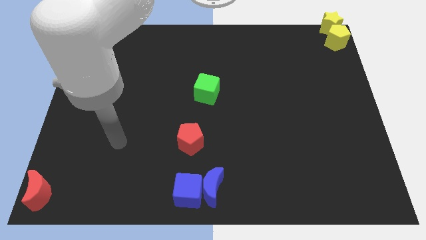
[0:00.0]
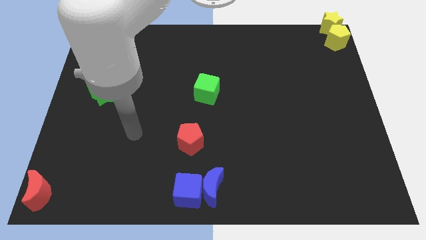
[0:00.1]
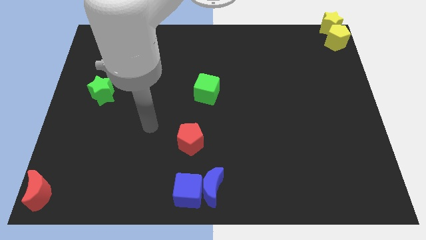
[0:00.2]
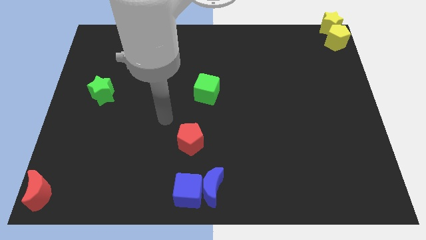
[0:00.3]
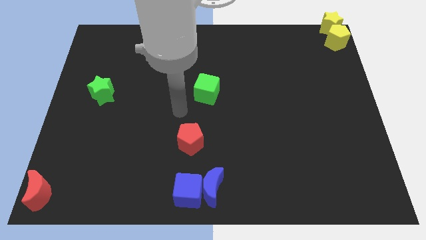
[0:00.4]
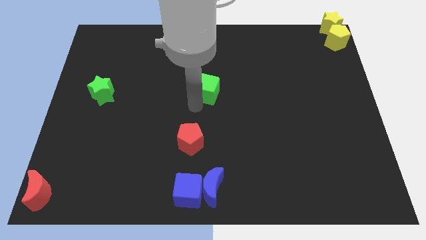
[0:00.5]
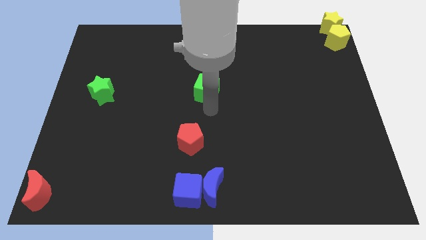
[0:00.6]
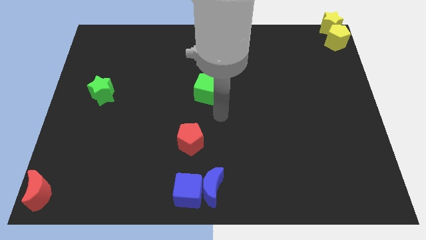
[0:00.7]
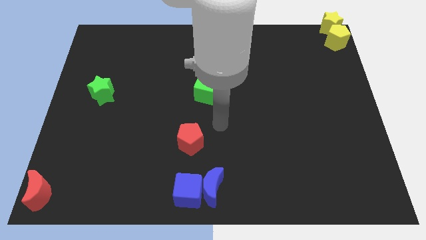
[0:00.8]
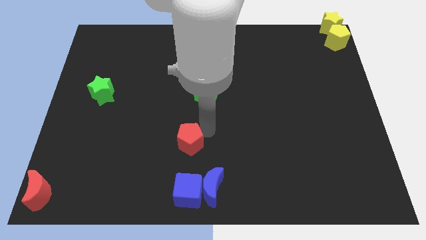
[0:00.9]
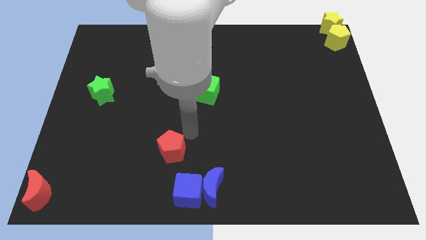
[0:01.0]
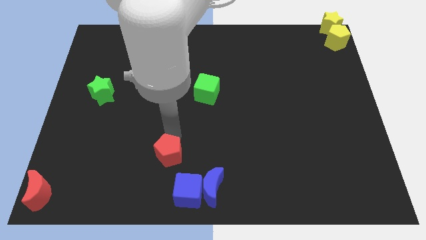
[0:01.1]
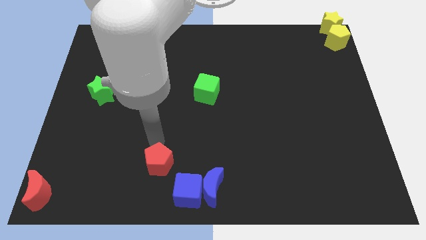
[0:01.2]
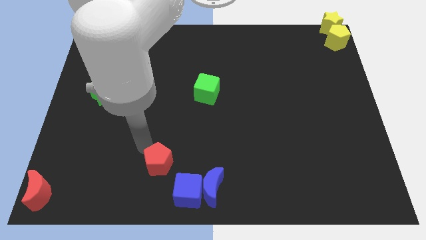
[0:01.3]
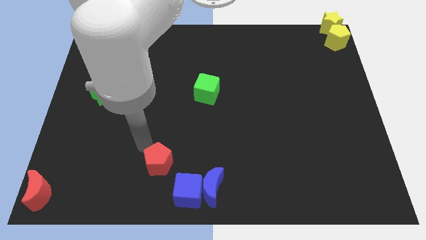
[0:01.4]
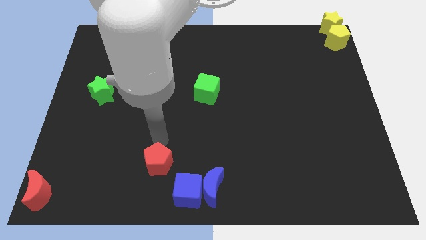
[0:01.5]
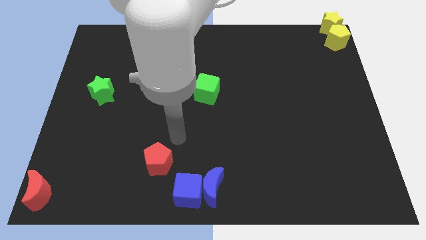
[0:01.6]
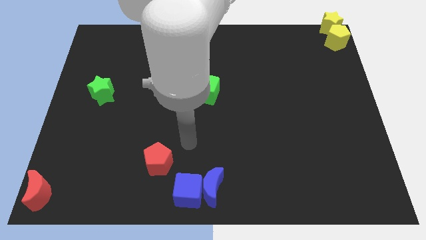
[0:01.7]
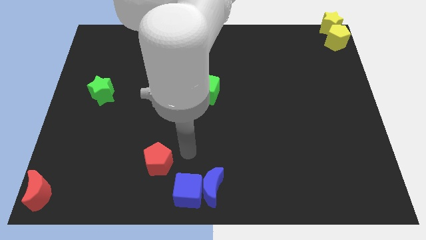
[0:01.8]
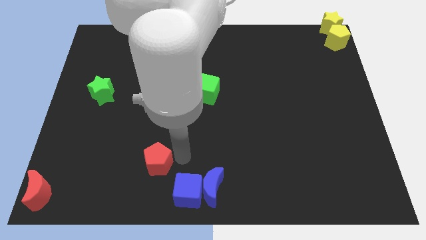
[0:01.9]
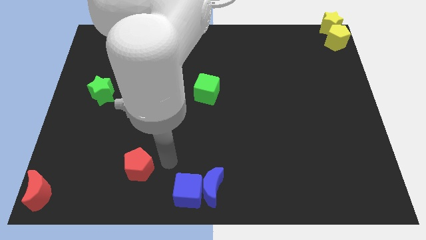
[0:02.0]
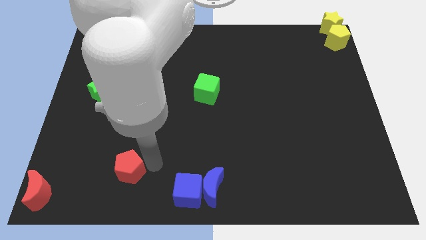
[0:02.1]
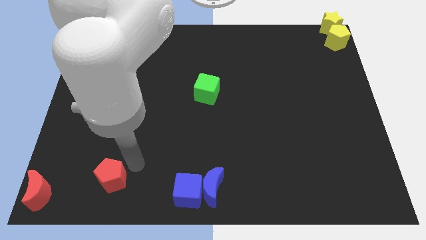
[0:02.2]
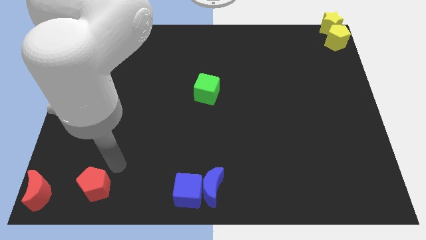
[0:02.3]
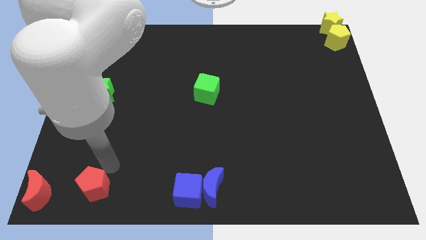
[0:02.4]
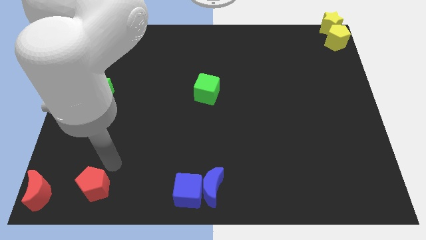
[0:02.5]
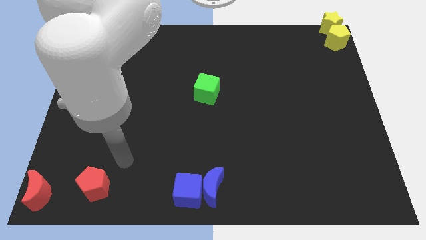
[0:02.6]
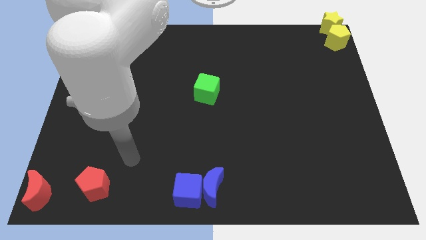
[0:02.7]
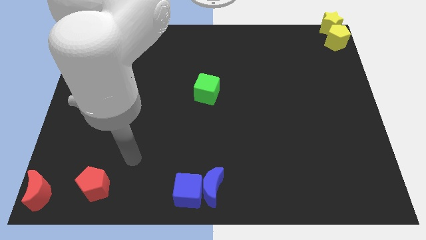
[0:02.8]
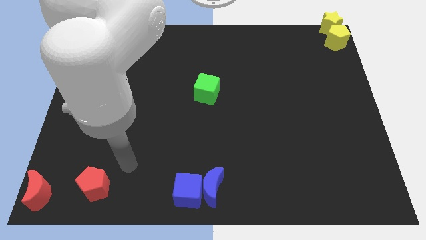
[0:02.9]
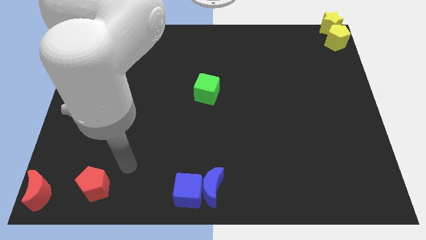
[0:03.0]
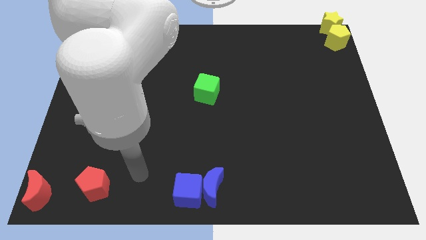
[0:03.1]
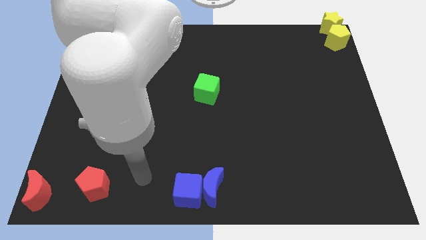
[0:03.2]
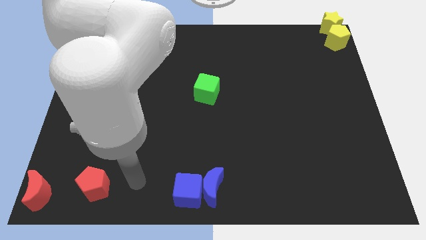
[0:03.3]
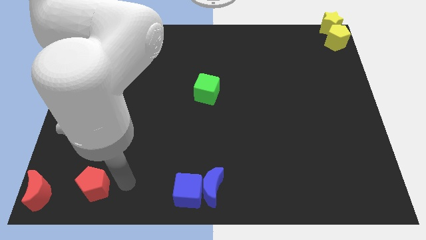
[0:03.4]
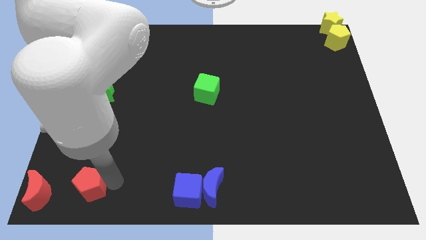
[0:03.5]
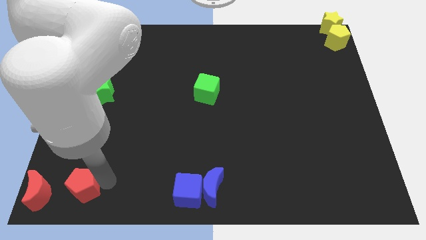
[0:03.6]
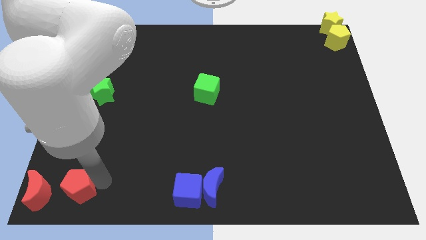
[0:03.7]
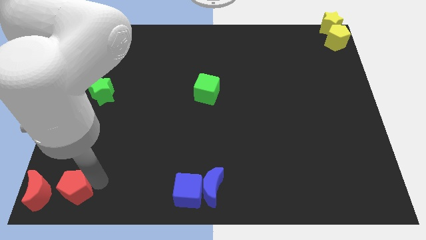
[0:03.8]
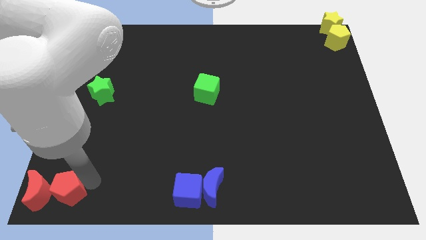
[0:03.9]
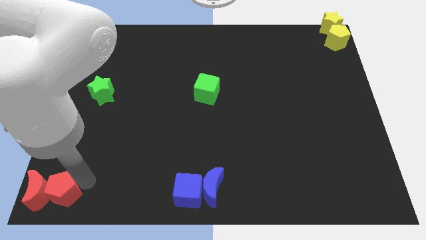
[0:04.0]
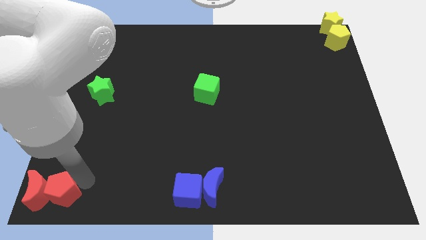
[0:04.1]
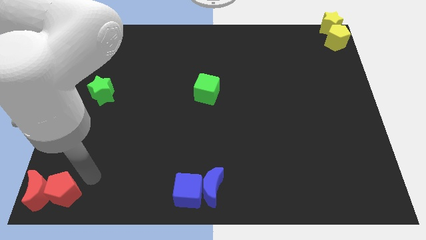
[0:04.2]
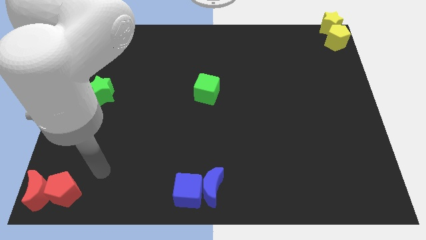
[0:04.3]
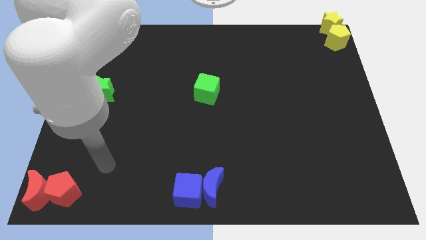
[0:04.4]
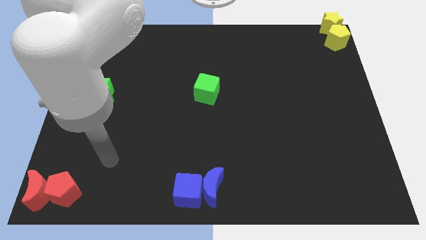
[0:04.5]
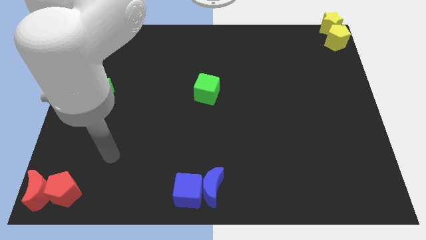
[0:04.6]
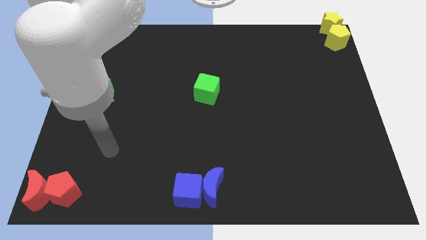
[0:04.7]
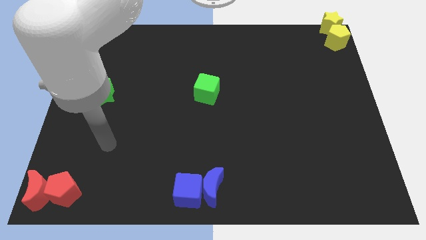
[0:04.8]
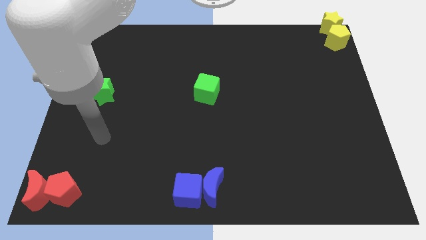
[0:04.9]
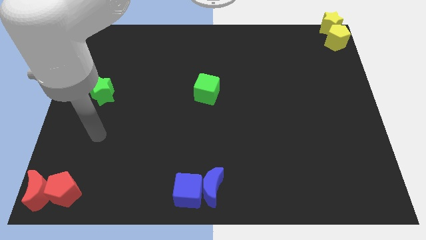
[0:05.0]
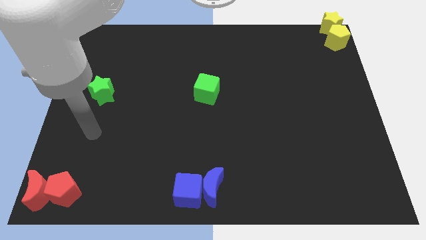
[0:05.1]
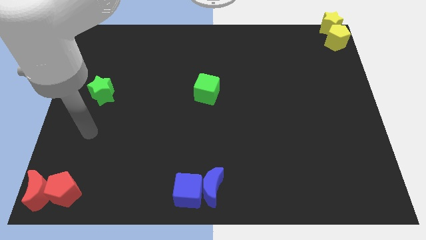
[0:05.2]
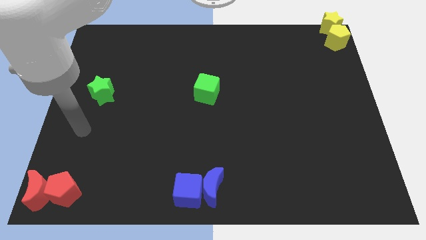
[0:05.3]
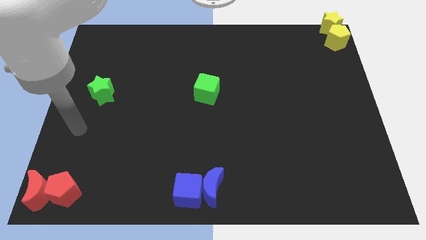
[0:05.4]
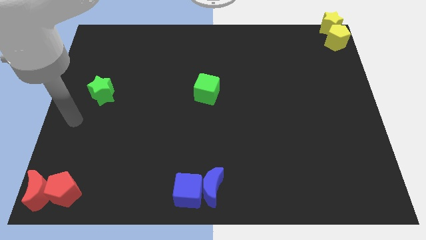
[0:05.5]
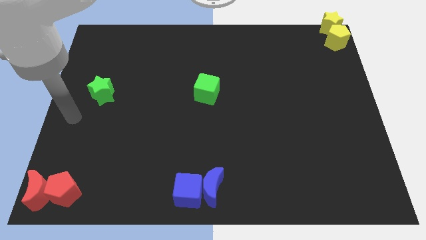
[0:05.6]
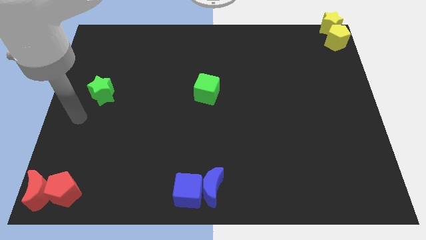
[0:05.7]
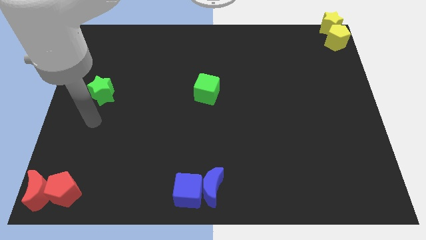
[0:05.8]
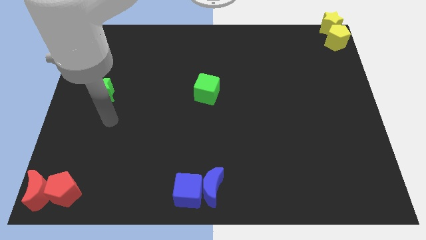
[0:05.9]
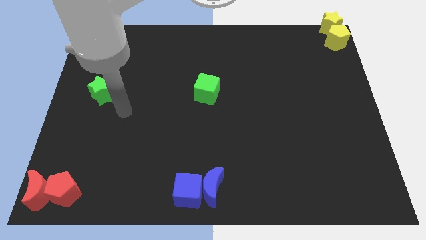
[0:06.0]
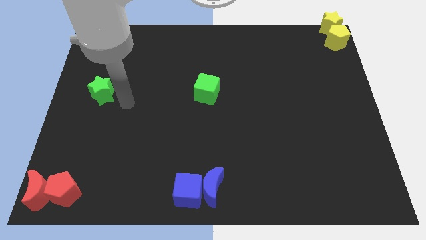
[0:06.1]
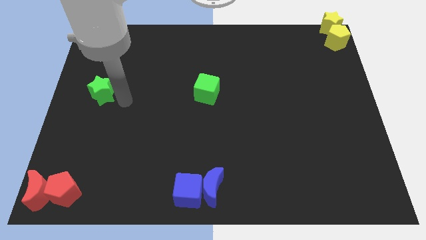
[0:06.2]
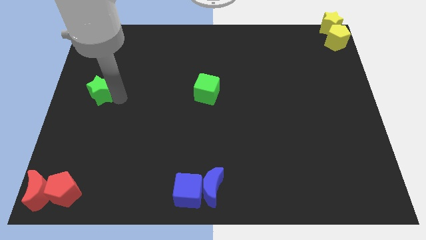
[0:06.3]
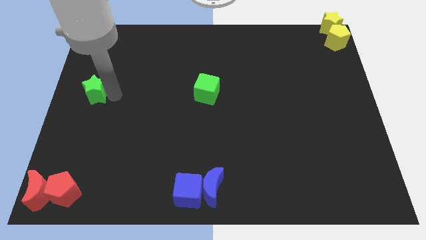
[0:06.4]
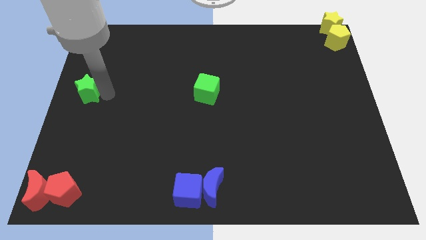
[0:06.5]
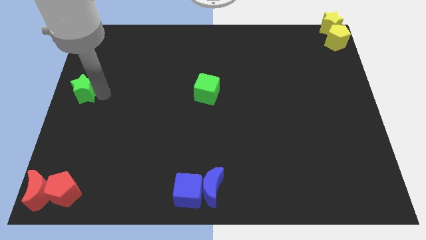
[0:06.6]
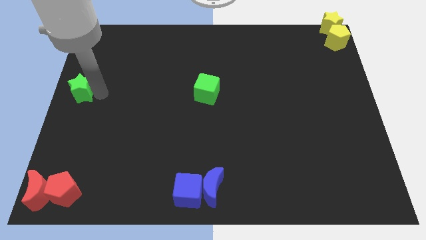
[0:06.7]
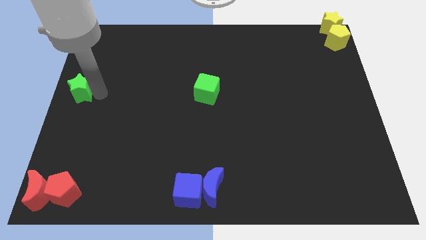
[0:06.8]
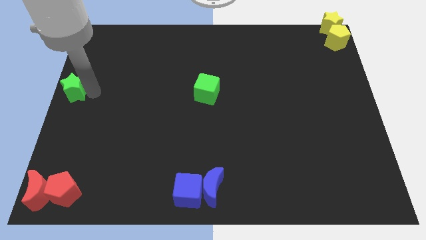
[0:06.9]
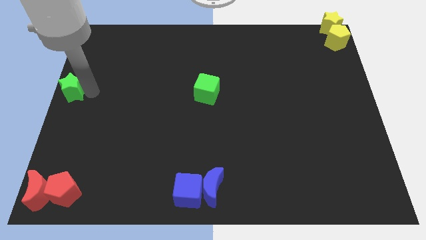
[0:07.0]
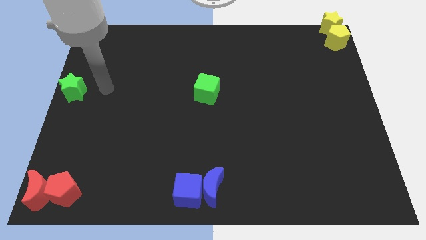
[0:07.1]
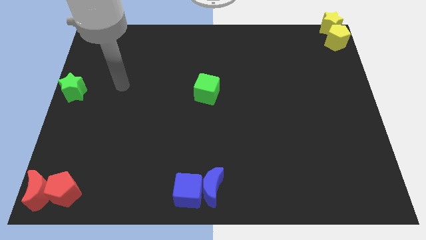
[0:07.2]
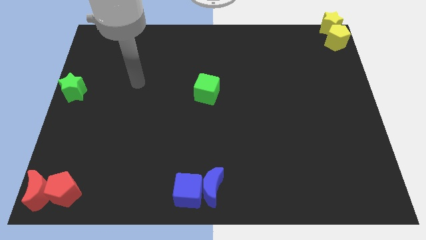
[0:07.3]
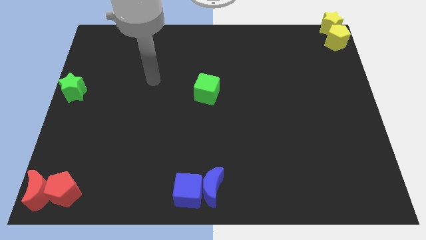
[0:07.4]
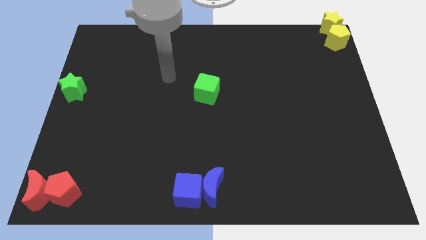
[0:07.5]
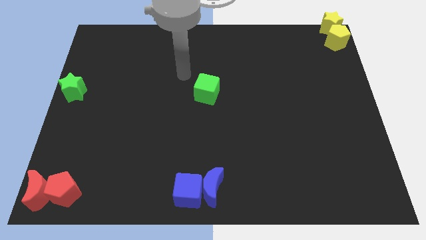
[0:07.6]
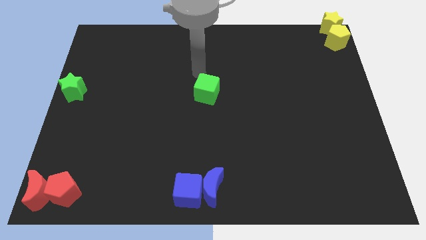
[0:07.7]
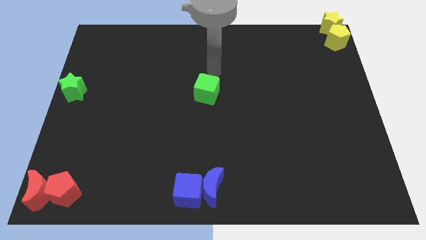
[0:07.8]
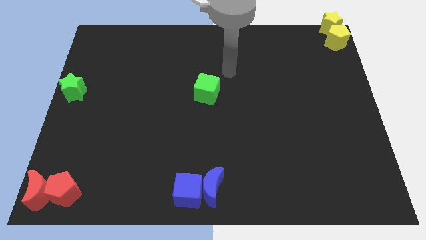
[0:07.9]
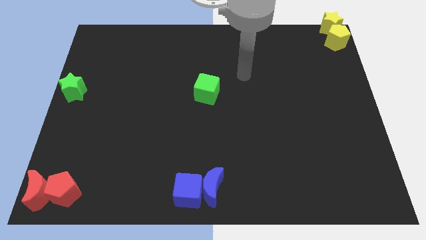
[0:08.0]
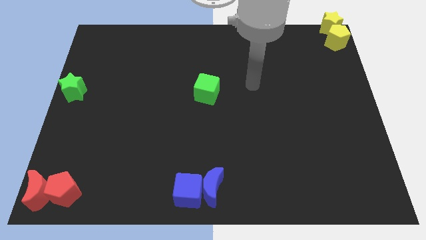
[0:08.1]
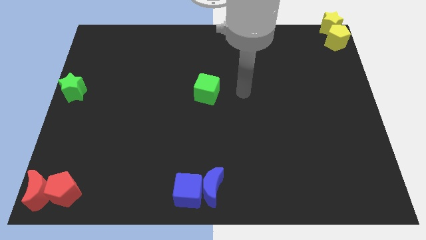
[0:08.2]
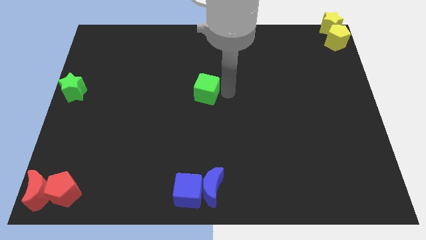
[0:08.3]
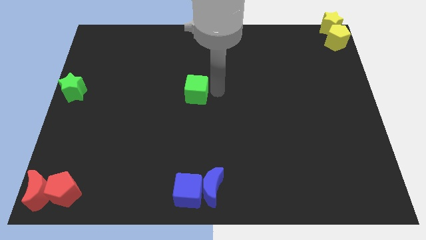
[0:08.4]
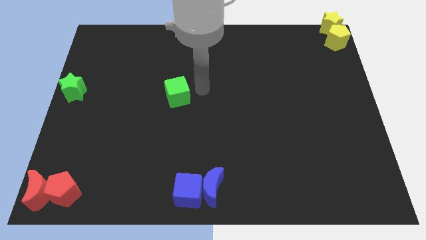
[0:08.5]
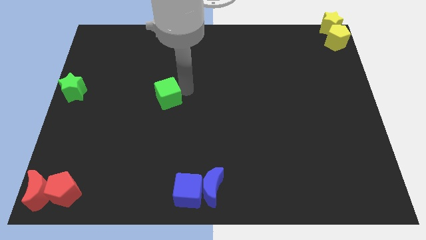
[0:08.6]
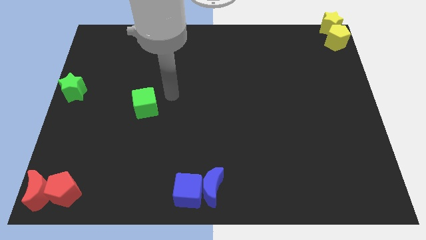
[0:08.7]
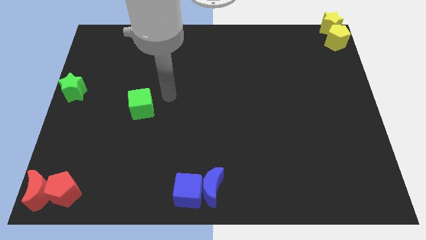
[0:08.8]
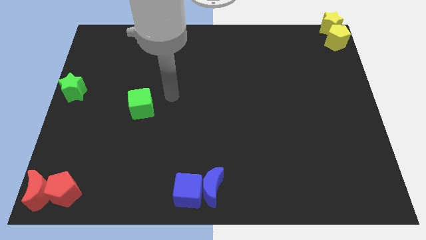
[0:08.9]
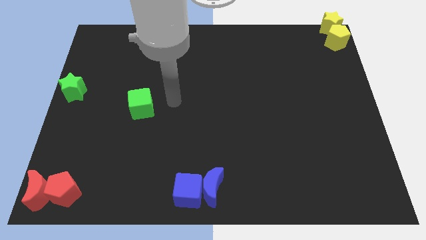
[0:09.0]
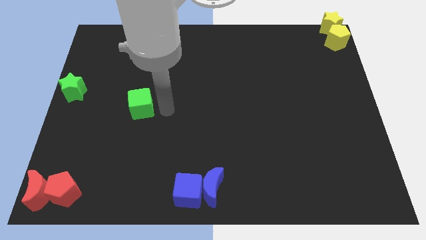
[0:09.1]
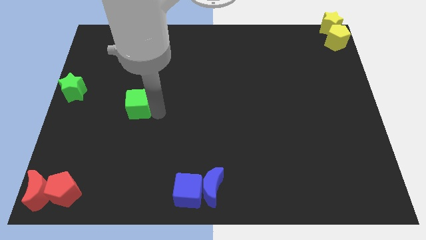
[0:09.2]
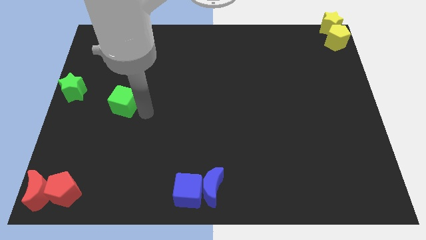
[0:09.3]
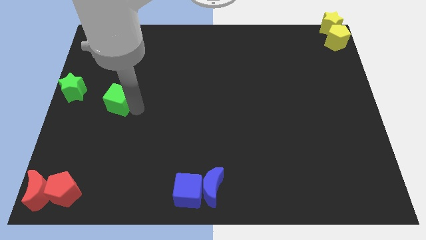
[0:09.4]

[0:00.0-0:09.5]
place red pentagon near red crescent
